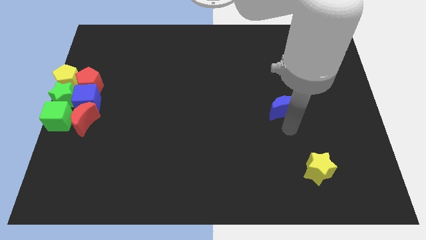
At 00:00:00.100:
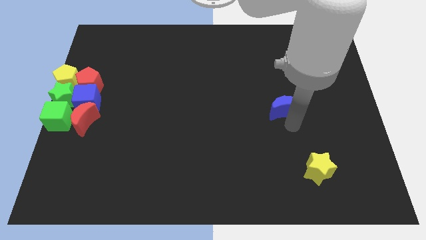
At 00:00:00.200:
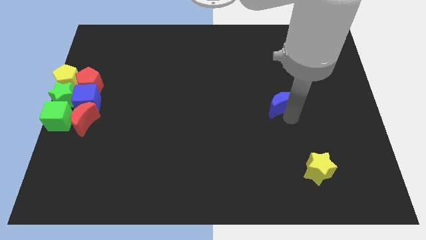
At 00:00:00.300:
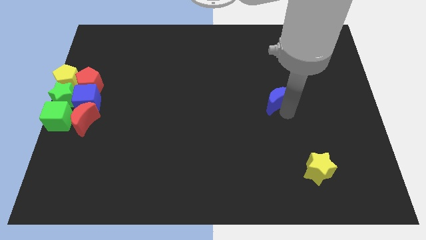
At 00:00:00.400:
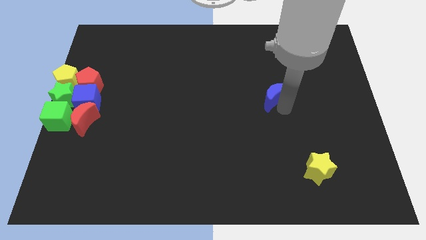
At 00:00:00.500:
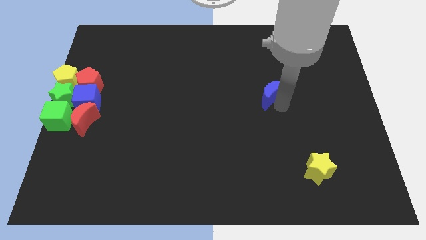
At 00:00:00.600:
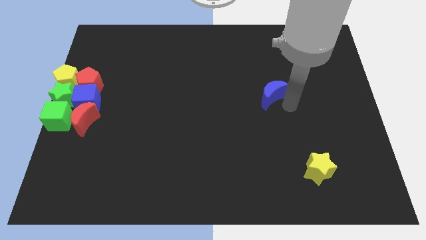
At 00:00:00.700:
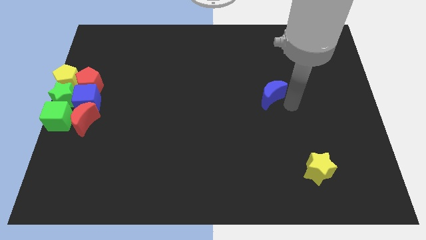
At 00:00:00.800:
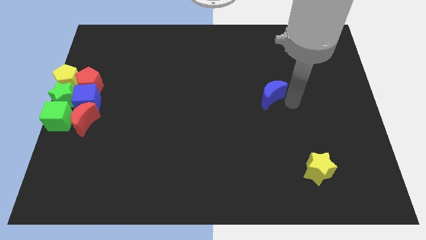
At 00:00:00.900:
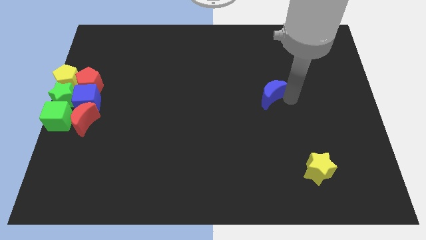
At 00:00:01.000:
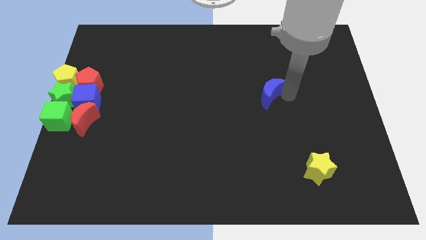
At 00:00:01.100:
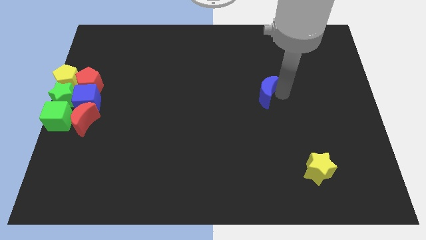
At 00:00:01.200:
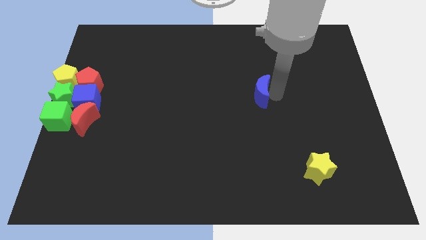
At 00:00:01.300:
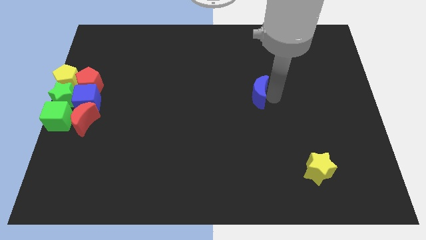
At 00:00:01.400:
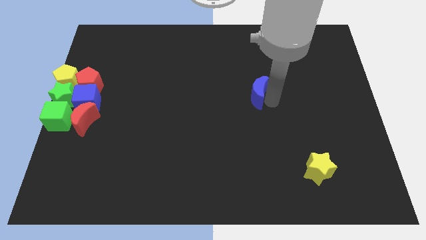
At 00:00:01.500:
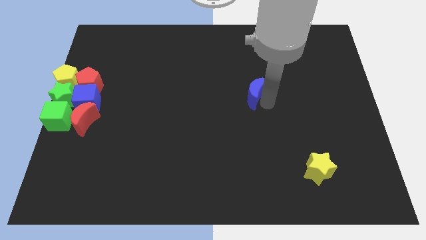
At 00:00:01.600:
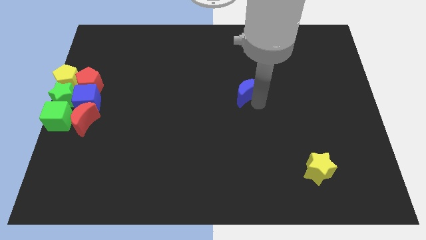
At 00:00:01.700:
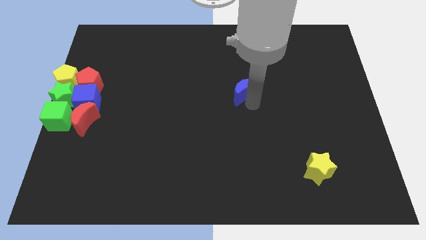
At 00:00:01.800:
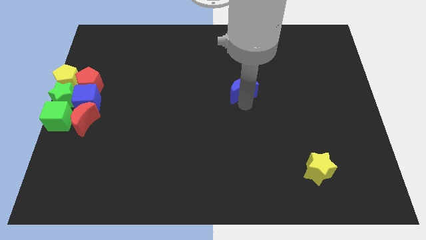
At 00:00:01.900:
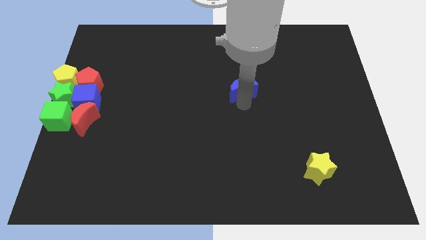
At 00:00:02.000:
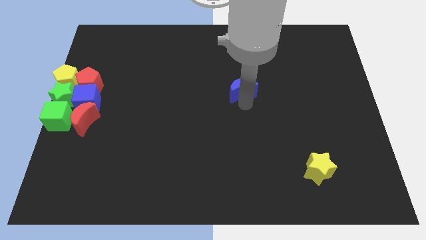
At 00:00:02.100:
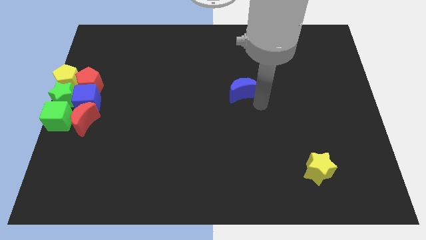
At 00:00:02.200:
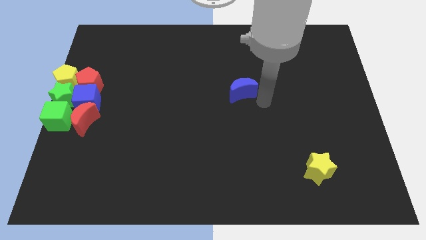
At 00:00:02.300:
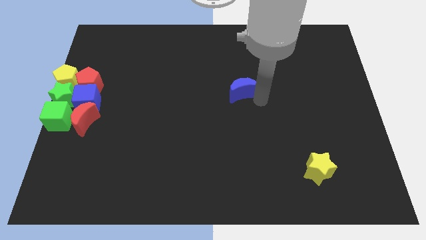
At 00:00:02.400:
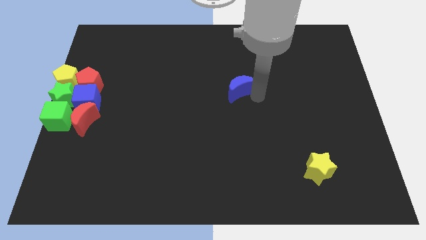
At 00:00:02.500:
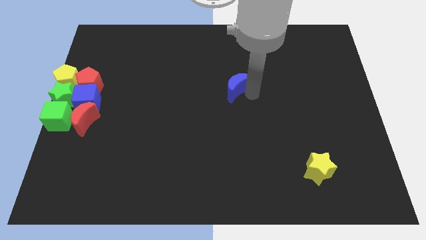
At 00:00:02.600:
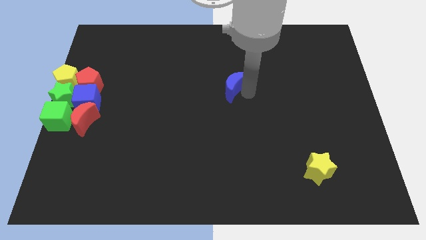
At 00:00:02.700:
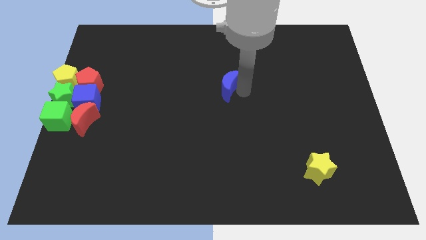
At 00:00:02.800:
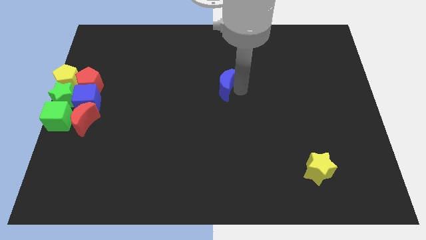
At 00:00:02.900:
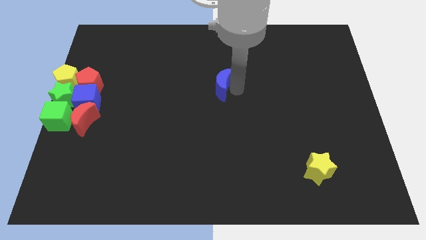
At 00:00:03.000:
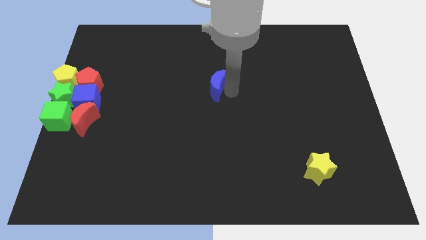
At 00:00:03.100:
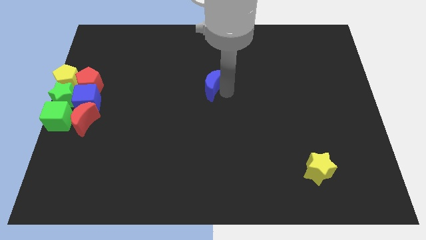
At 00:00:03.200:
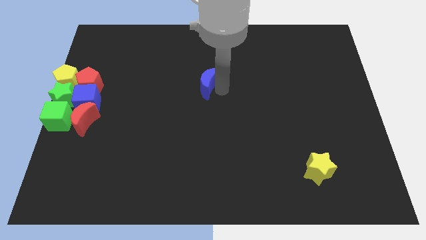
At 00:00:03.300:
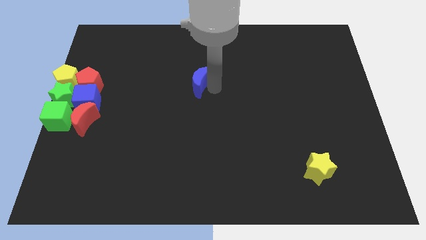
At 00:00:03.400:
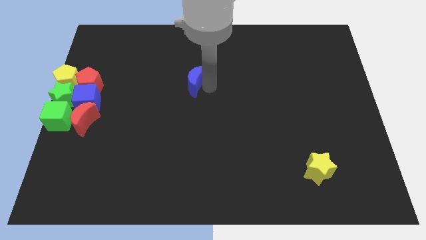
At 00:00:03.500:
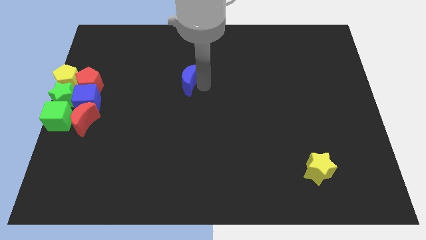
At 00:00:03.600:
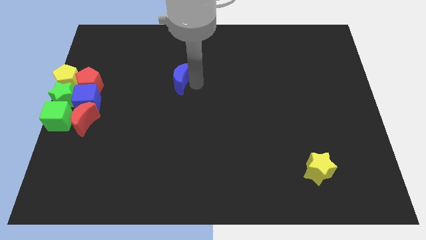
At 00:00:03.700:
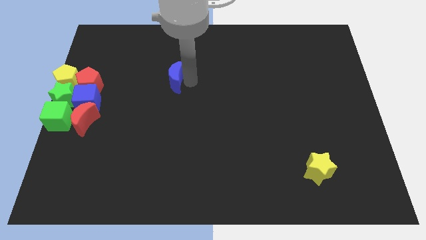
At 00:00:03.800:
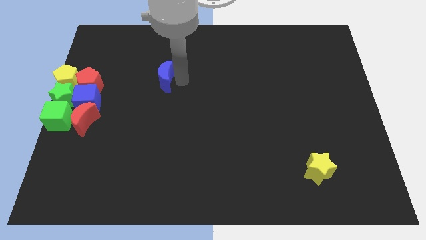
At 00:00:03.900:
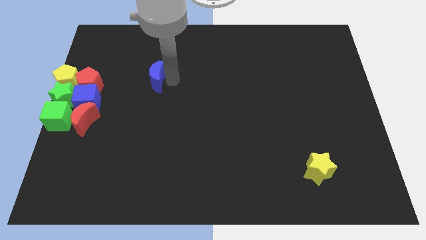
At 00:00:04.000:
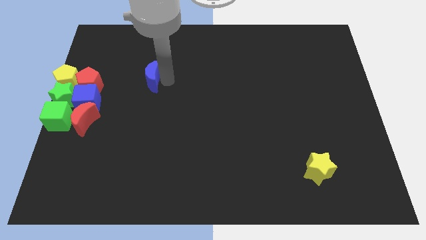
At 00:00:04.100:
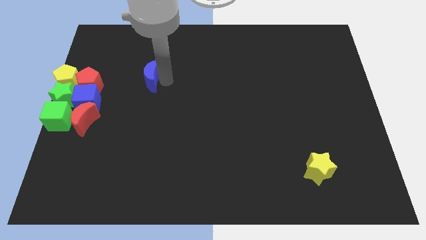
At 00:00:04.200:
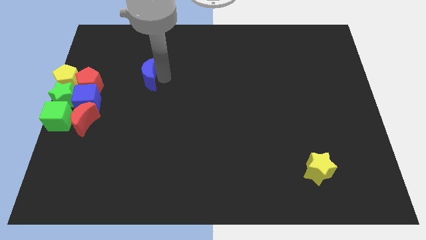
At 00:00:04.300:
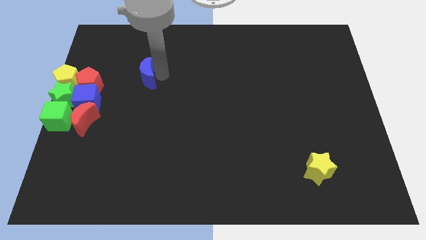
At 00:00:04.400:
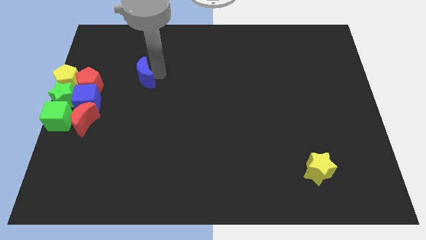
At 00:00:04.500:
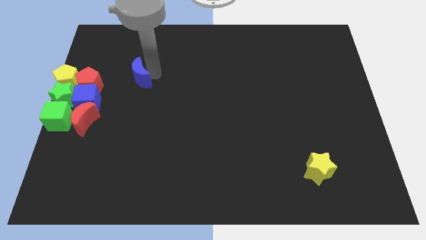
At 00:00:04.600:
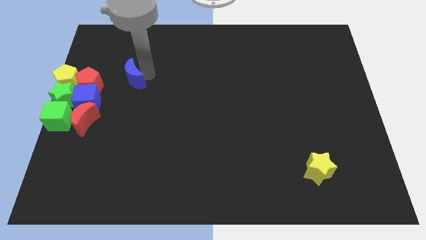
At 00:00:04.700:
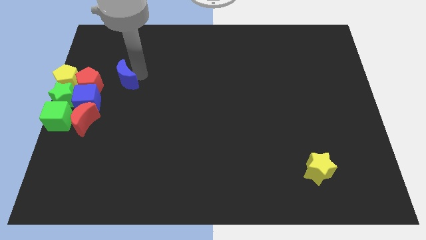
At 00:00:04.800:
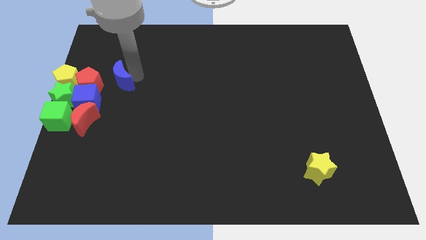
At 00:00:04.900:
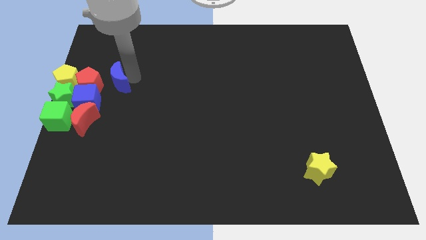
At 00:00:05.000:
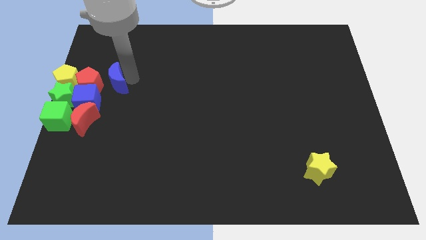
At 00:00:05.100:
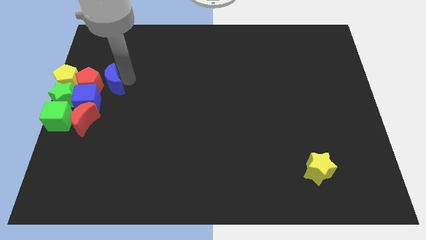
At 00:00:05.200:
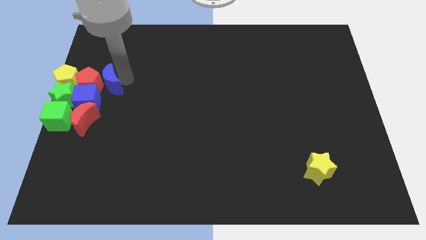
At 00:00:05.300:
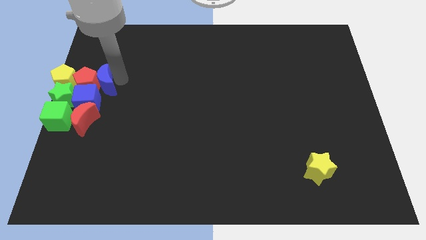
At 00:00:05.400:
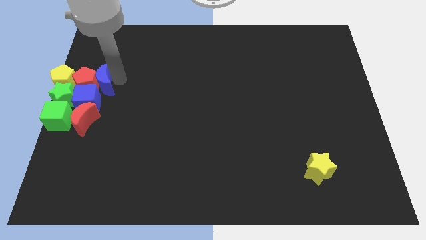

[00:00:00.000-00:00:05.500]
move the blue cube into the right side of the red petnagon

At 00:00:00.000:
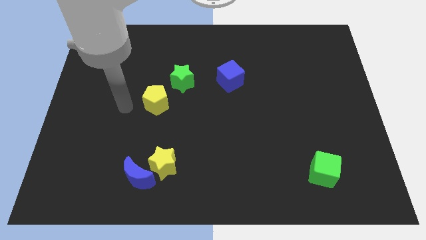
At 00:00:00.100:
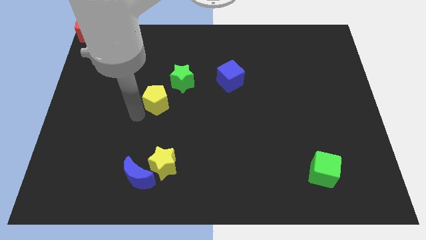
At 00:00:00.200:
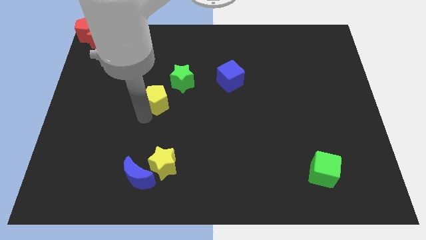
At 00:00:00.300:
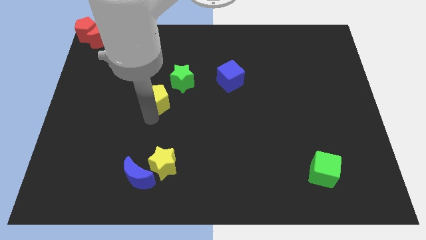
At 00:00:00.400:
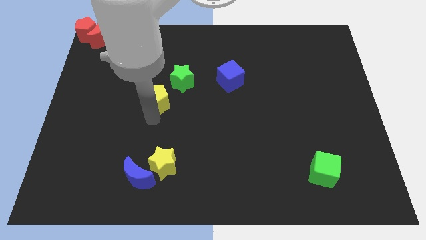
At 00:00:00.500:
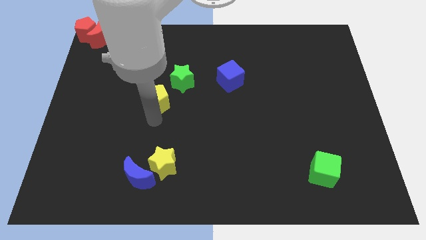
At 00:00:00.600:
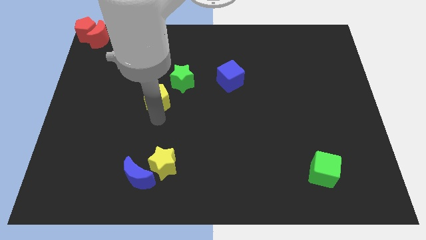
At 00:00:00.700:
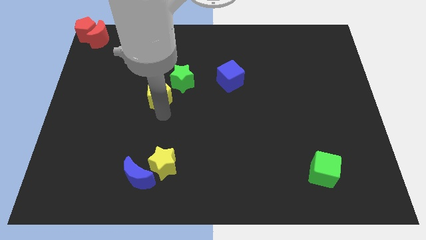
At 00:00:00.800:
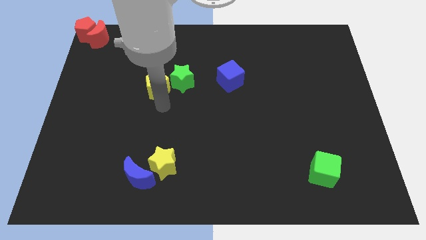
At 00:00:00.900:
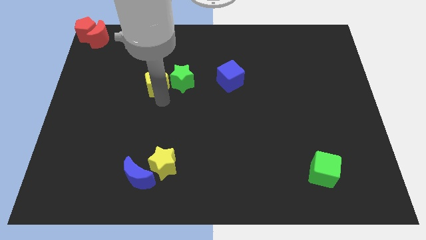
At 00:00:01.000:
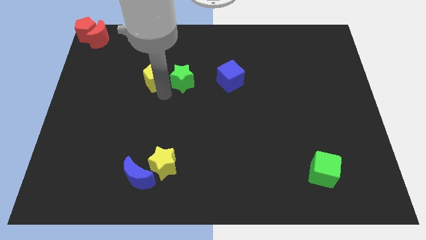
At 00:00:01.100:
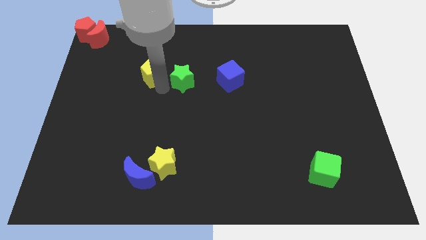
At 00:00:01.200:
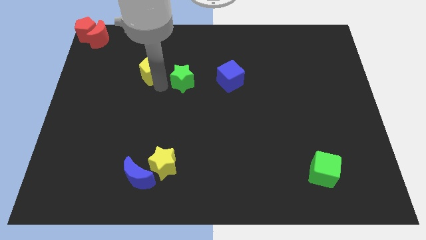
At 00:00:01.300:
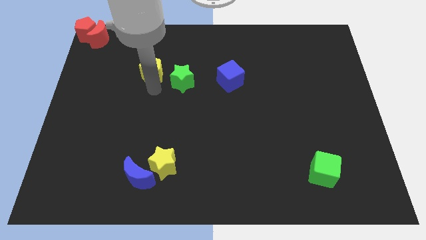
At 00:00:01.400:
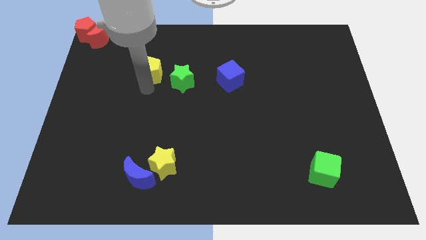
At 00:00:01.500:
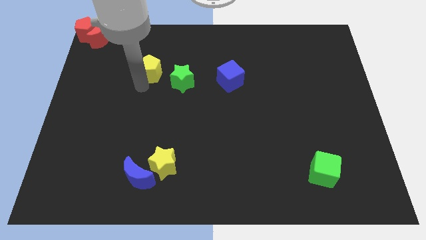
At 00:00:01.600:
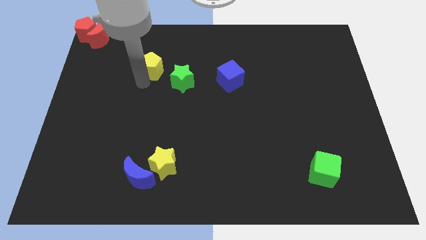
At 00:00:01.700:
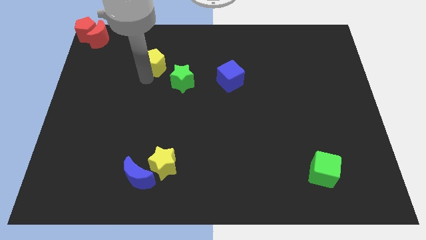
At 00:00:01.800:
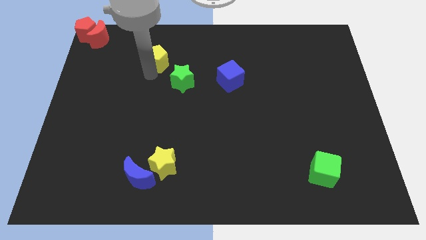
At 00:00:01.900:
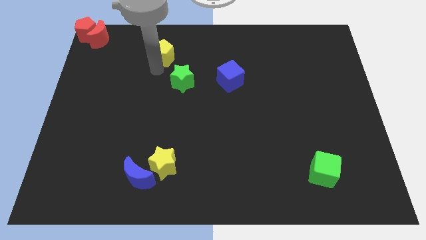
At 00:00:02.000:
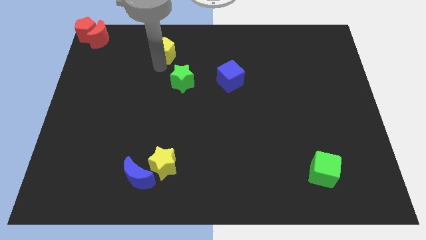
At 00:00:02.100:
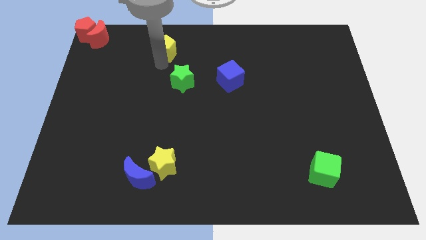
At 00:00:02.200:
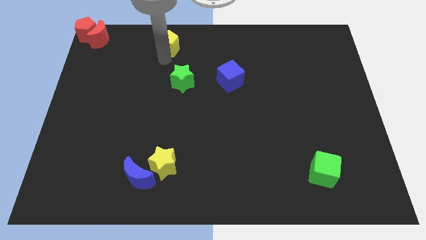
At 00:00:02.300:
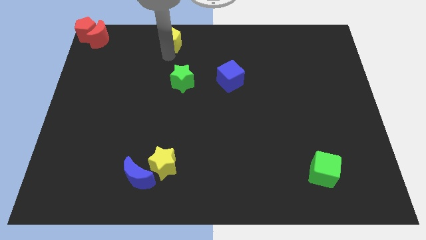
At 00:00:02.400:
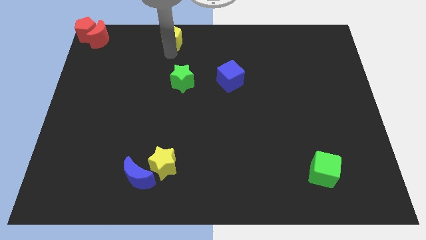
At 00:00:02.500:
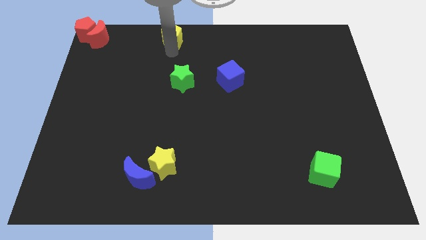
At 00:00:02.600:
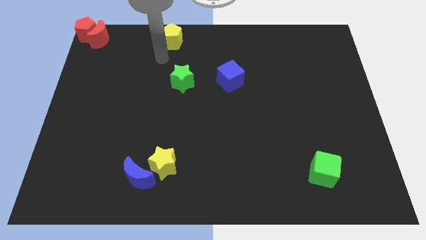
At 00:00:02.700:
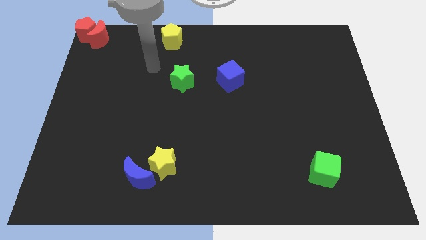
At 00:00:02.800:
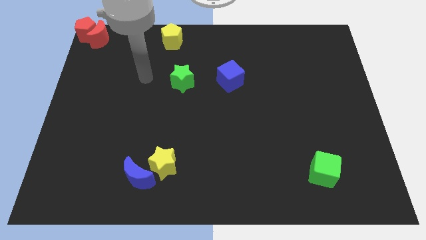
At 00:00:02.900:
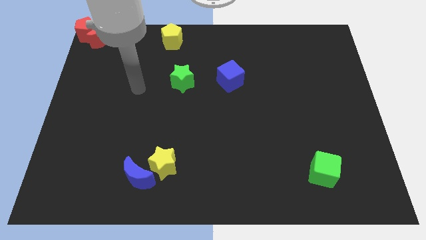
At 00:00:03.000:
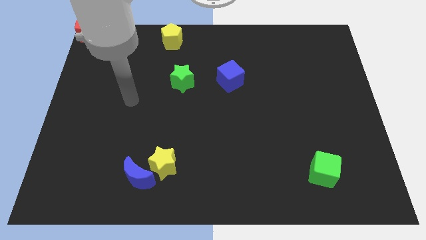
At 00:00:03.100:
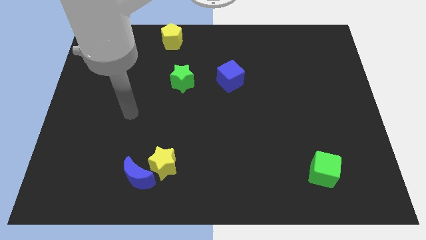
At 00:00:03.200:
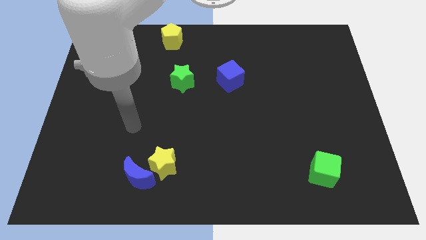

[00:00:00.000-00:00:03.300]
push the yellow pentagon to the top of the green star
